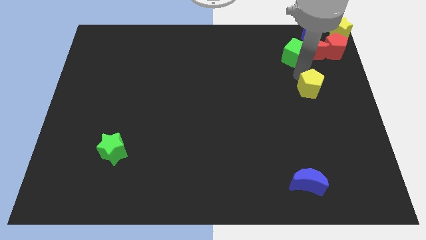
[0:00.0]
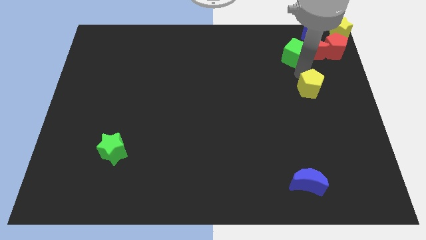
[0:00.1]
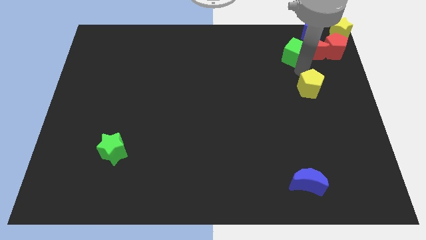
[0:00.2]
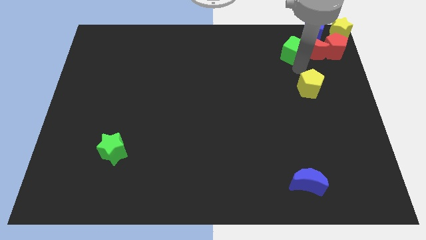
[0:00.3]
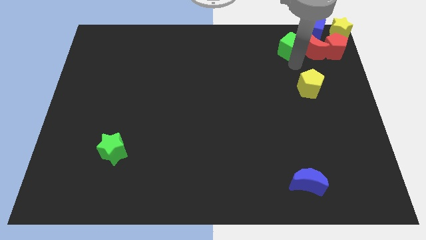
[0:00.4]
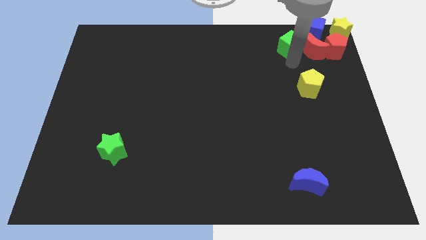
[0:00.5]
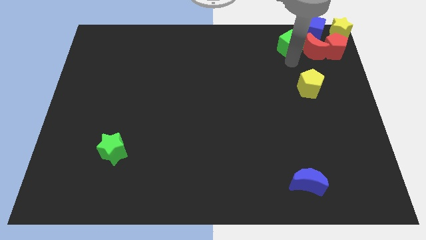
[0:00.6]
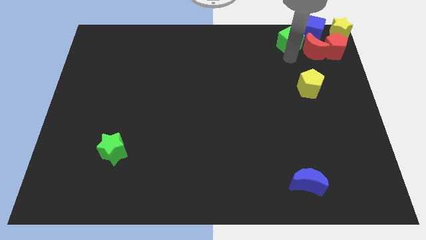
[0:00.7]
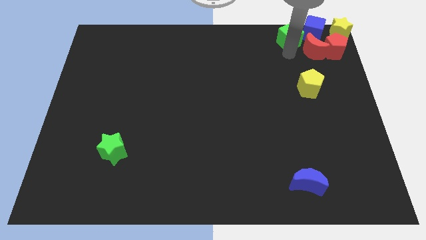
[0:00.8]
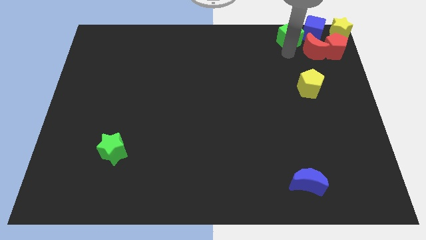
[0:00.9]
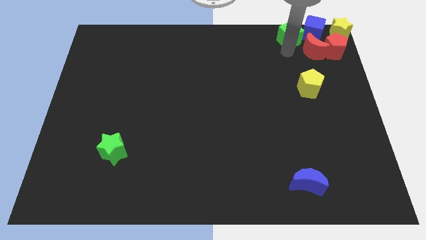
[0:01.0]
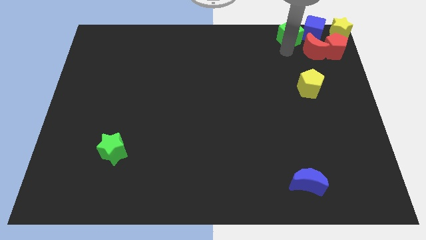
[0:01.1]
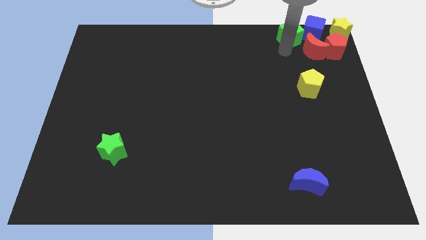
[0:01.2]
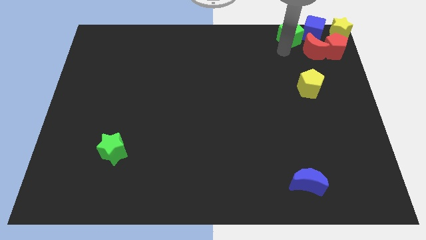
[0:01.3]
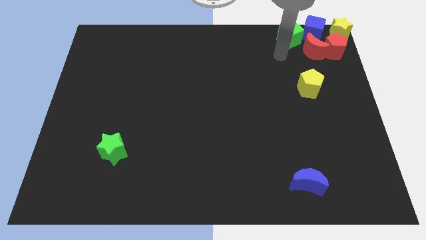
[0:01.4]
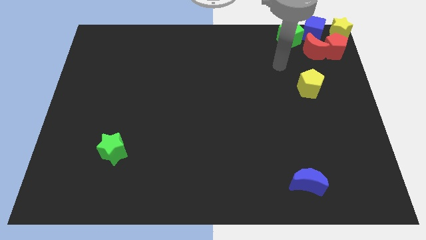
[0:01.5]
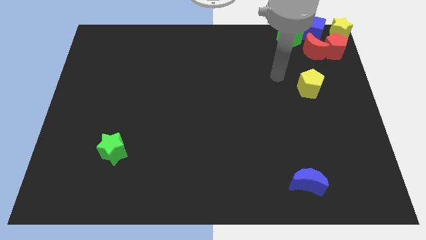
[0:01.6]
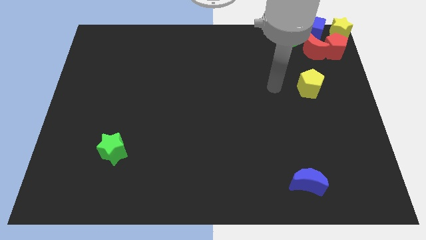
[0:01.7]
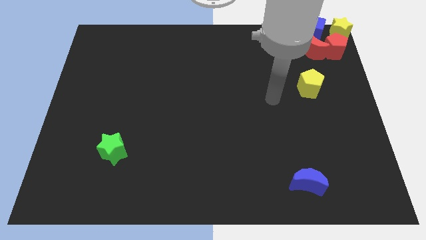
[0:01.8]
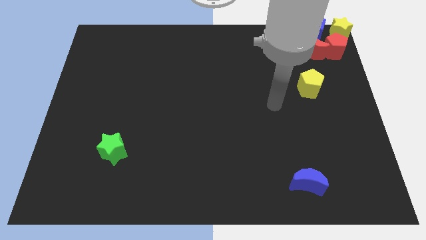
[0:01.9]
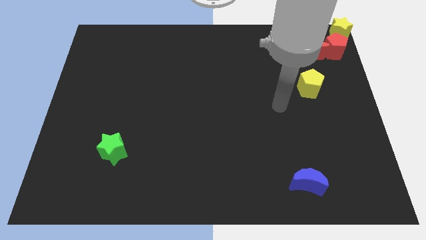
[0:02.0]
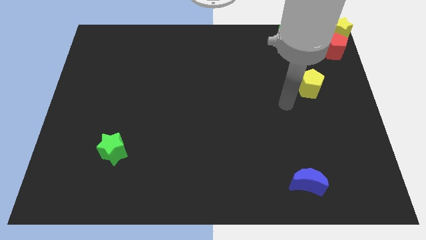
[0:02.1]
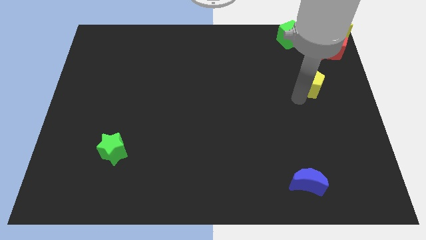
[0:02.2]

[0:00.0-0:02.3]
slightly push the green cube towards the top right

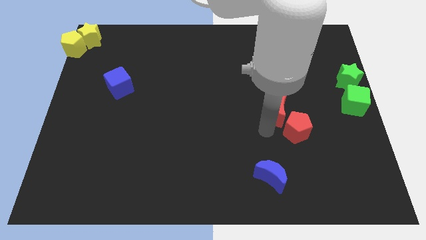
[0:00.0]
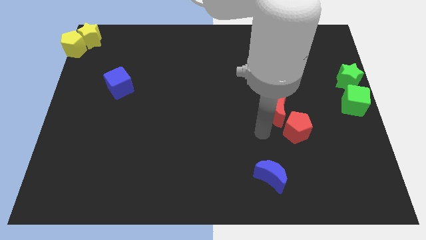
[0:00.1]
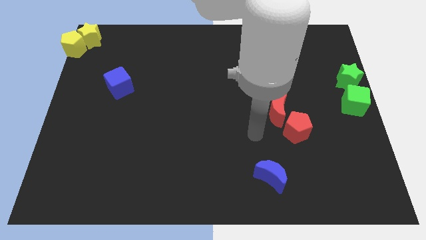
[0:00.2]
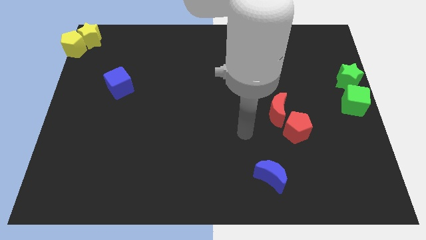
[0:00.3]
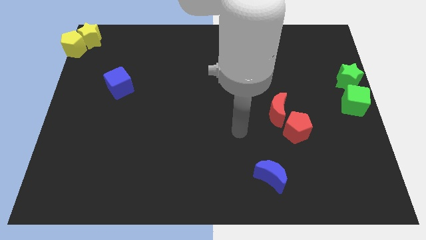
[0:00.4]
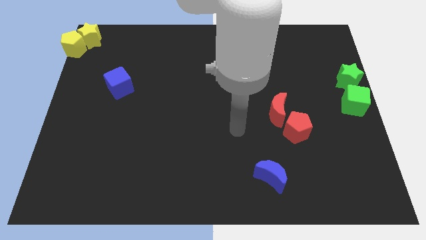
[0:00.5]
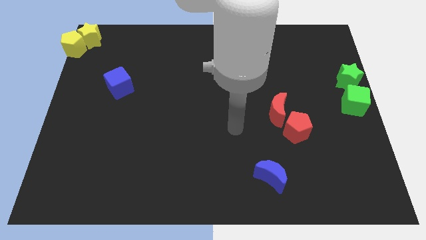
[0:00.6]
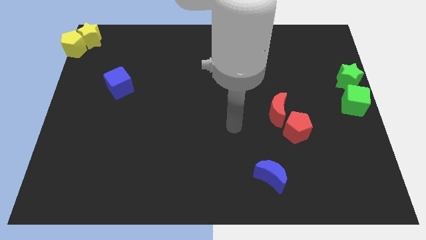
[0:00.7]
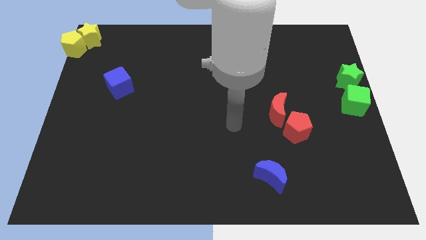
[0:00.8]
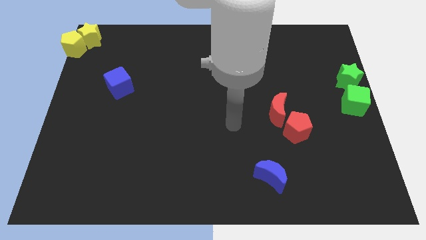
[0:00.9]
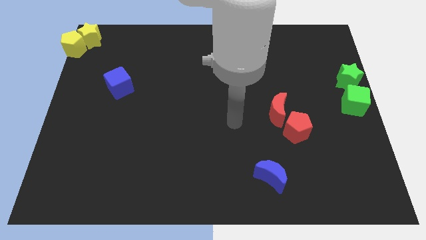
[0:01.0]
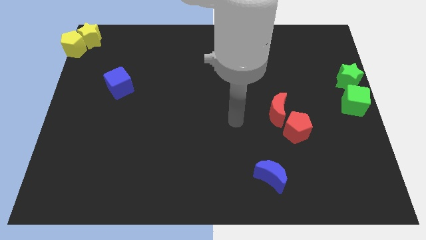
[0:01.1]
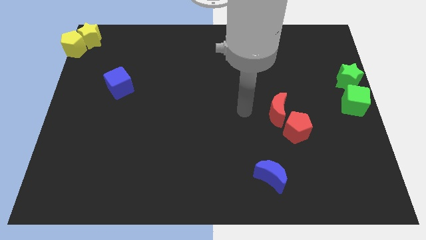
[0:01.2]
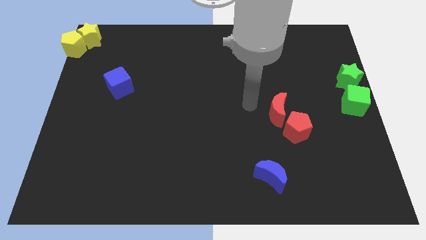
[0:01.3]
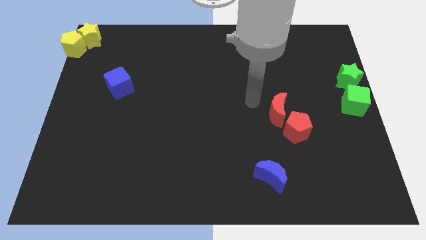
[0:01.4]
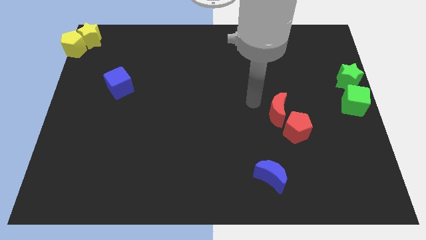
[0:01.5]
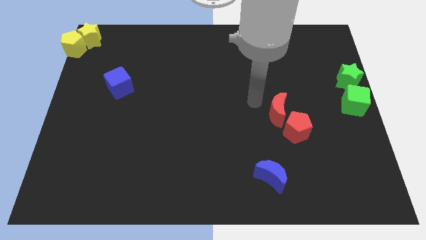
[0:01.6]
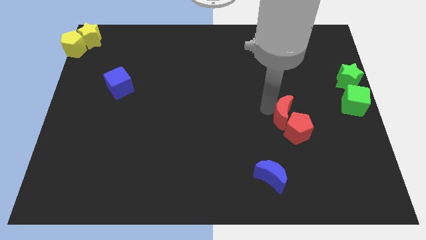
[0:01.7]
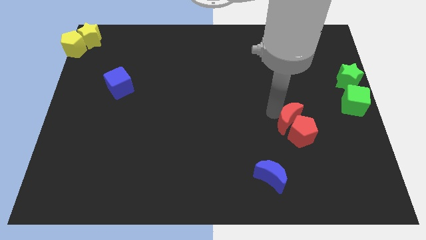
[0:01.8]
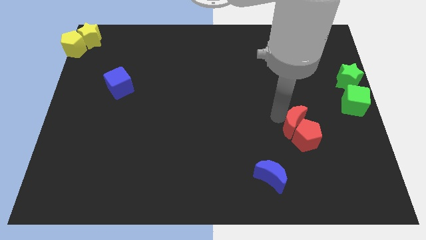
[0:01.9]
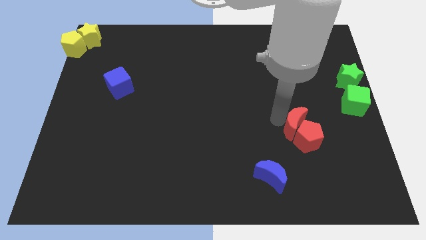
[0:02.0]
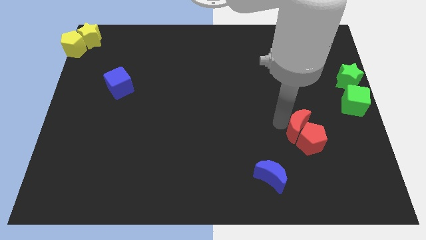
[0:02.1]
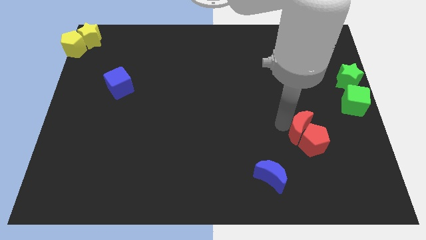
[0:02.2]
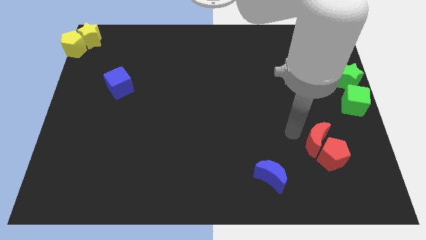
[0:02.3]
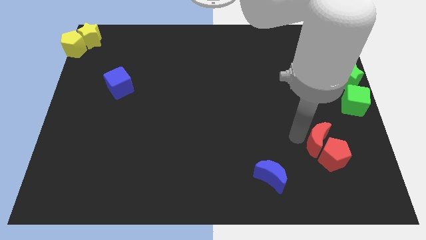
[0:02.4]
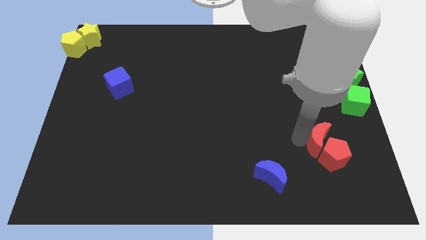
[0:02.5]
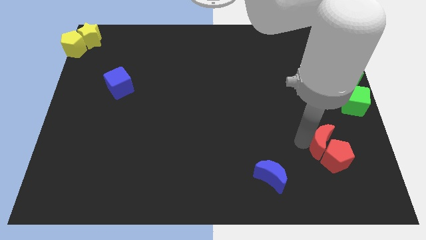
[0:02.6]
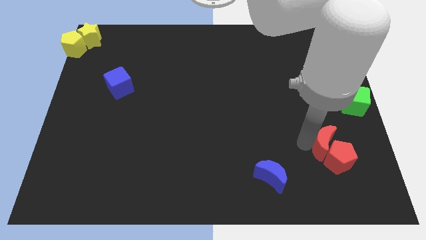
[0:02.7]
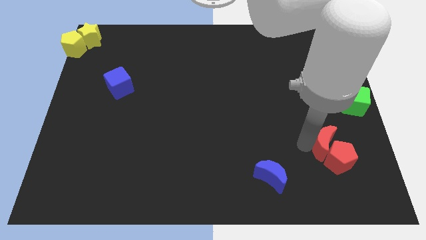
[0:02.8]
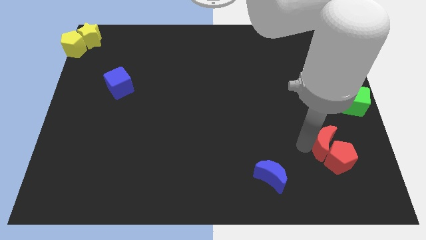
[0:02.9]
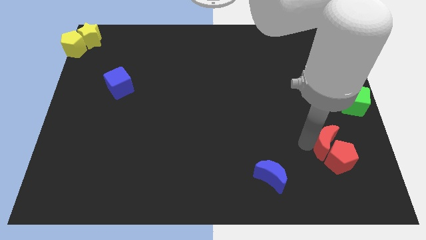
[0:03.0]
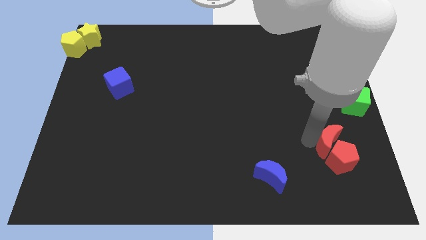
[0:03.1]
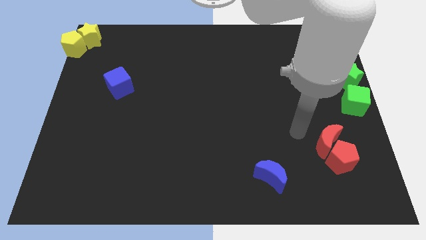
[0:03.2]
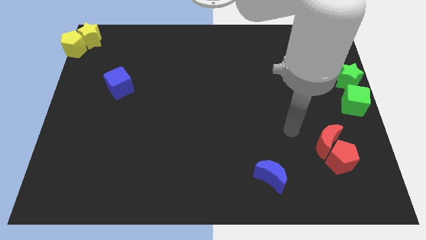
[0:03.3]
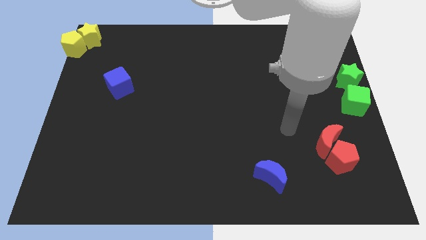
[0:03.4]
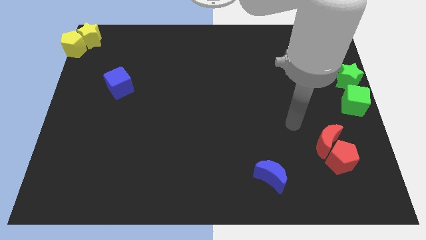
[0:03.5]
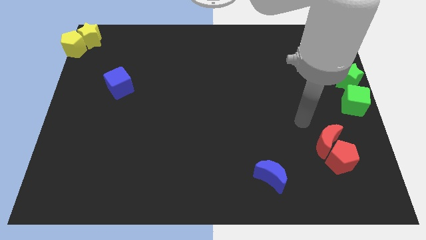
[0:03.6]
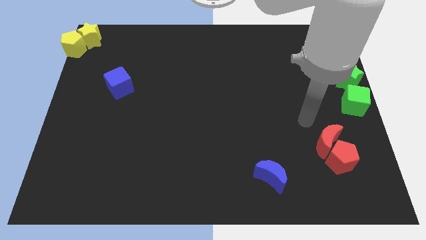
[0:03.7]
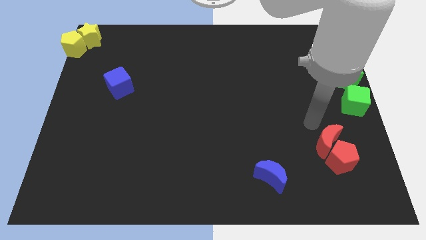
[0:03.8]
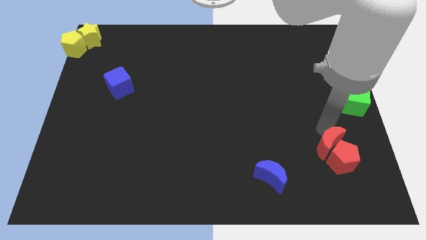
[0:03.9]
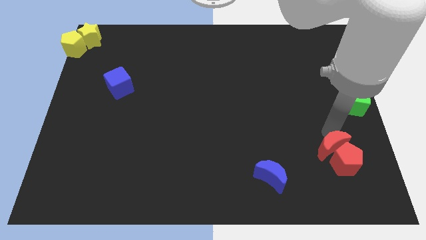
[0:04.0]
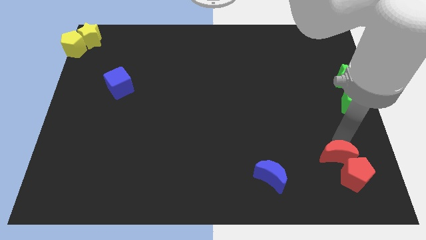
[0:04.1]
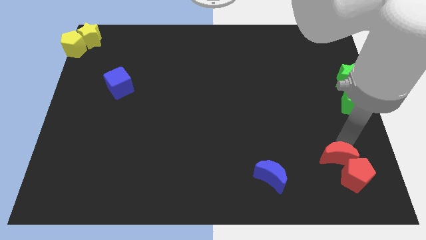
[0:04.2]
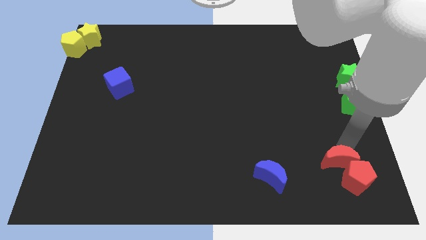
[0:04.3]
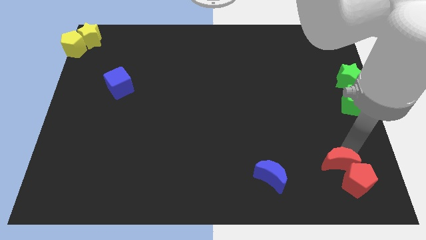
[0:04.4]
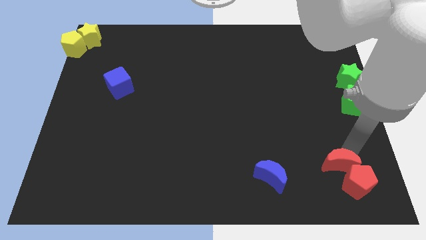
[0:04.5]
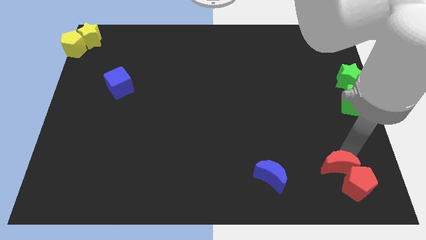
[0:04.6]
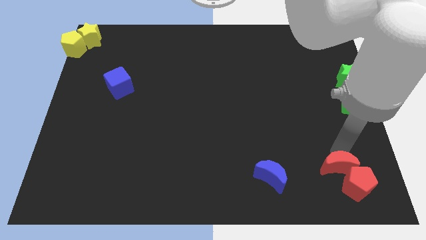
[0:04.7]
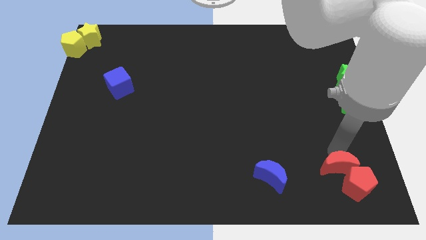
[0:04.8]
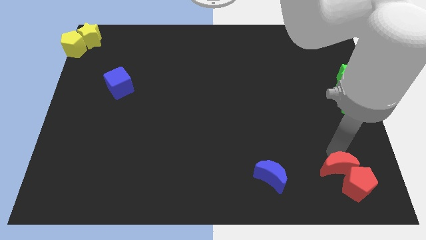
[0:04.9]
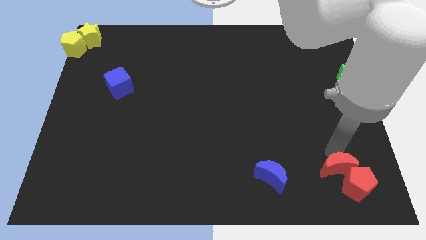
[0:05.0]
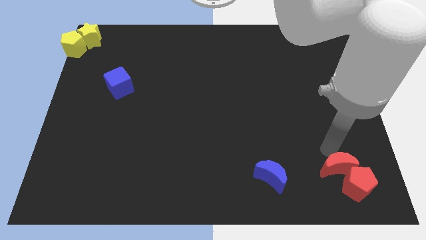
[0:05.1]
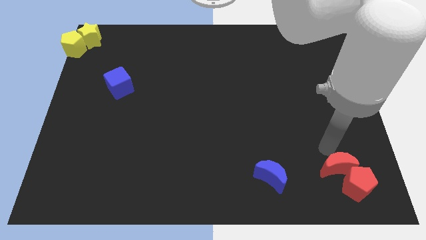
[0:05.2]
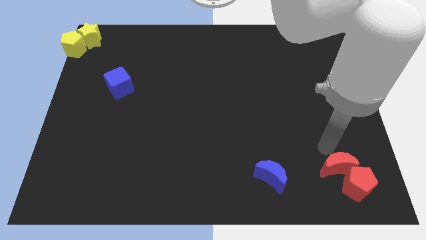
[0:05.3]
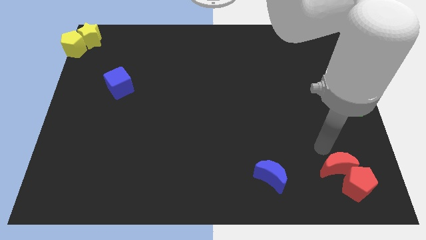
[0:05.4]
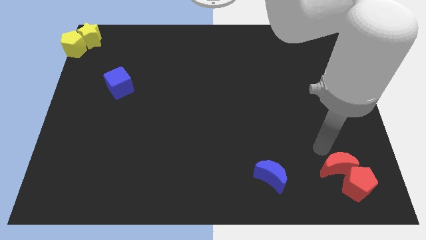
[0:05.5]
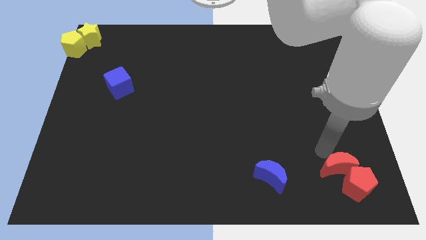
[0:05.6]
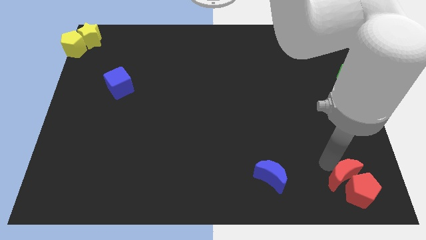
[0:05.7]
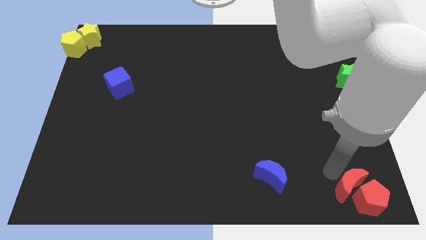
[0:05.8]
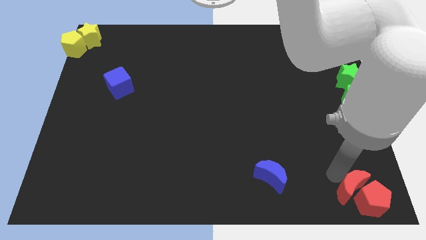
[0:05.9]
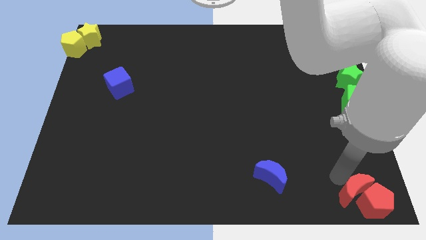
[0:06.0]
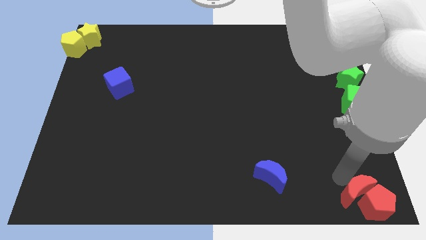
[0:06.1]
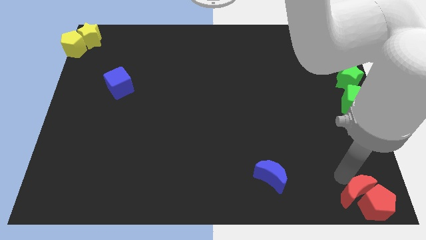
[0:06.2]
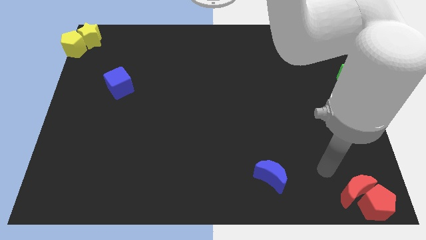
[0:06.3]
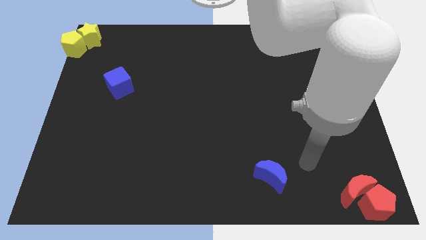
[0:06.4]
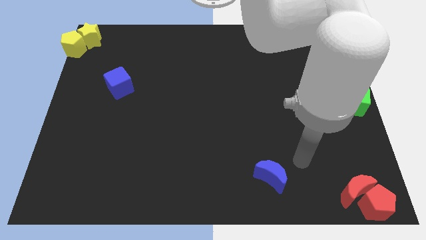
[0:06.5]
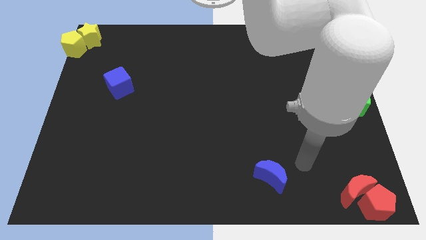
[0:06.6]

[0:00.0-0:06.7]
move the red blocks at the bottom right corner of the board
